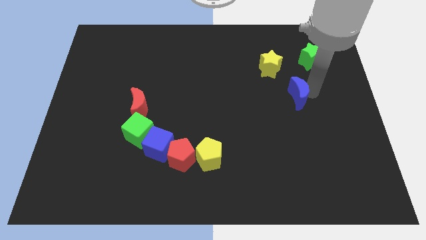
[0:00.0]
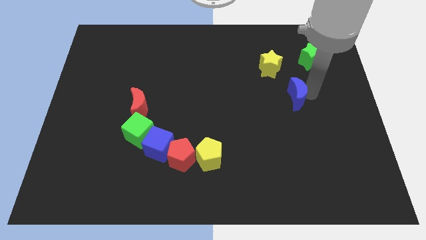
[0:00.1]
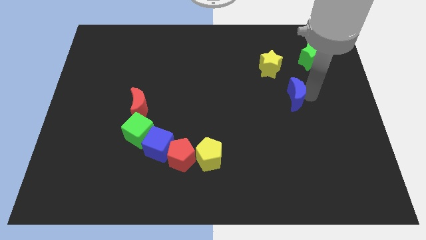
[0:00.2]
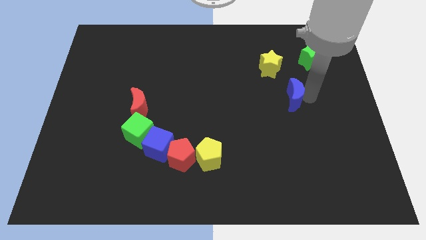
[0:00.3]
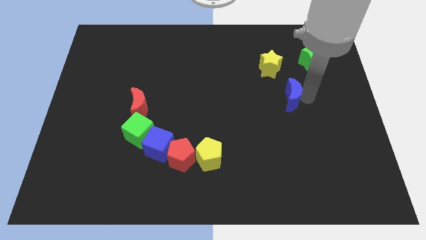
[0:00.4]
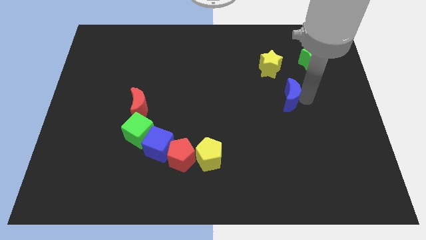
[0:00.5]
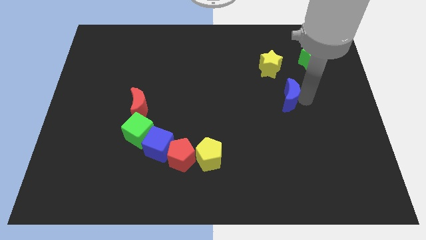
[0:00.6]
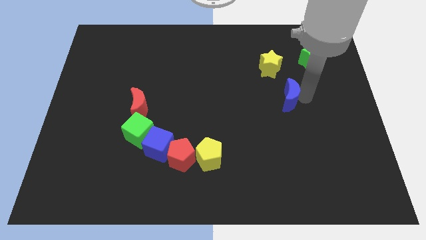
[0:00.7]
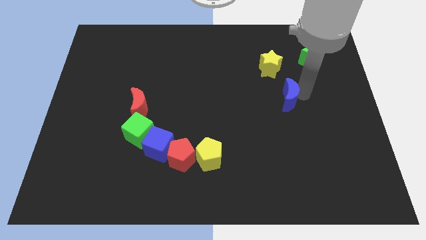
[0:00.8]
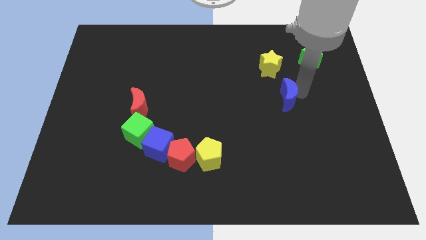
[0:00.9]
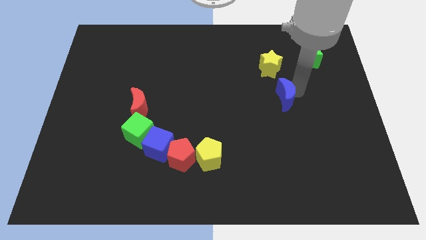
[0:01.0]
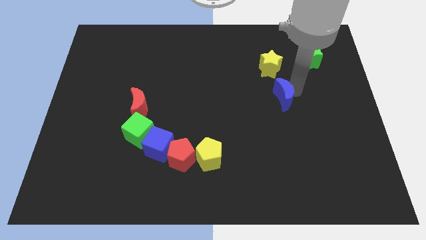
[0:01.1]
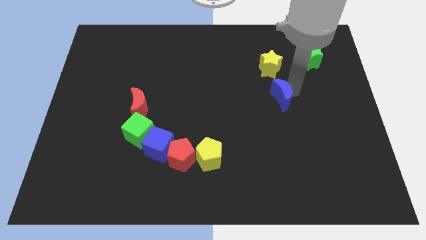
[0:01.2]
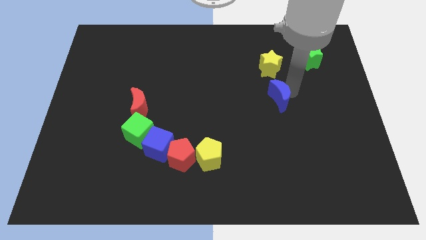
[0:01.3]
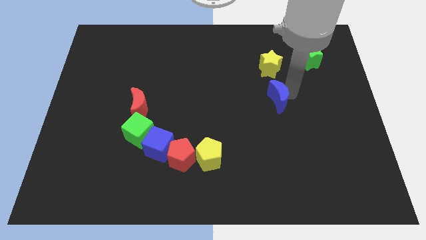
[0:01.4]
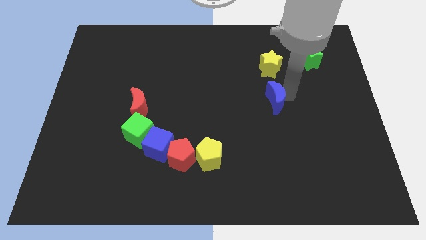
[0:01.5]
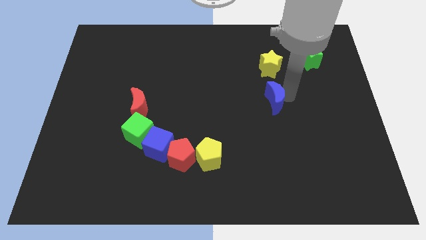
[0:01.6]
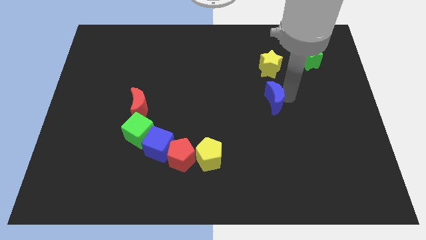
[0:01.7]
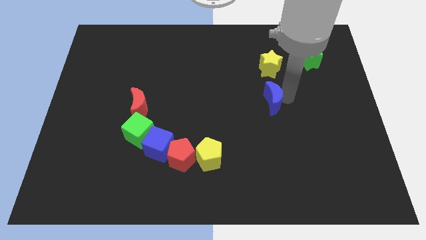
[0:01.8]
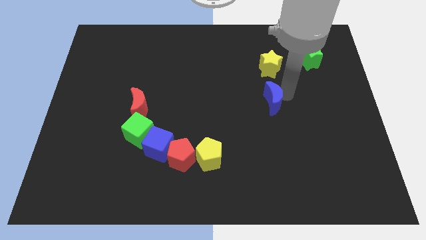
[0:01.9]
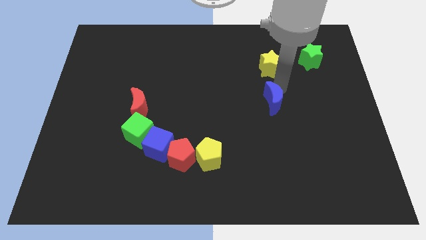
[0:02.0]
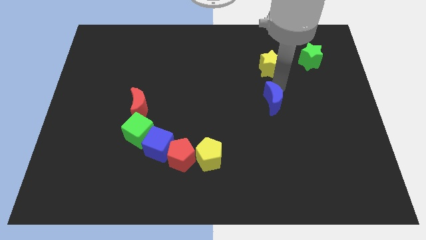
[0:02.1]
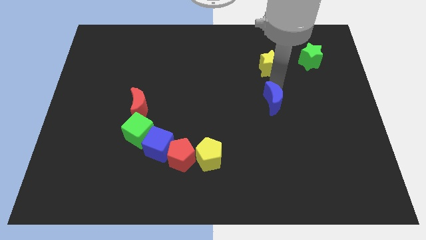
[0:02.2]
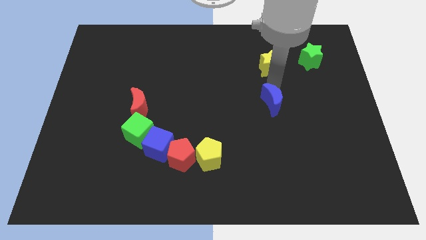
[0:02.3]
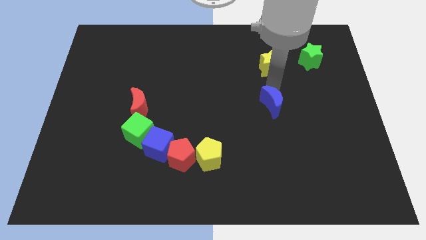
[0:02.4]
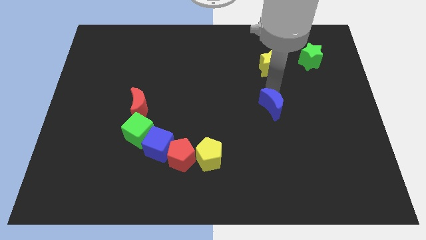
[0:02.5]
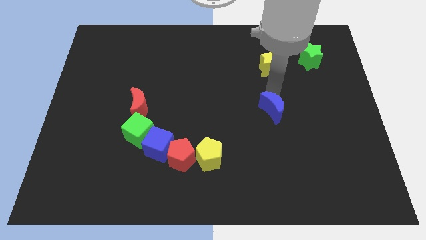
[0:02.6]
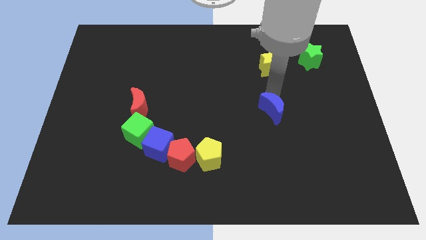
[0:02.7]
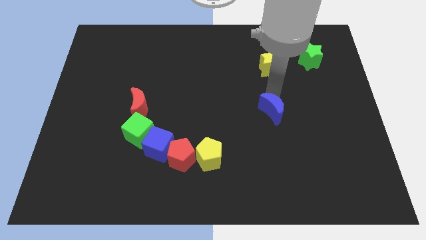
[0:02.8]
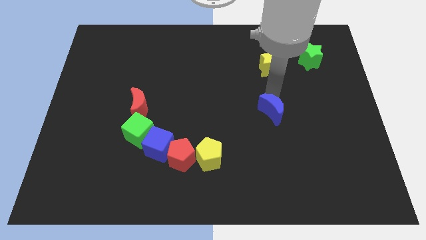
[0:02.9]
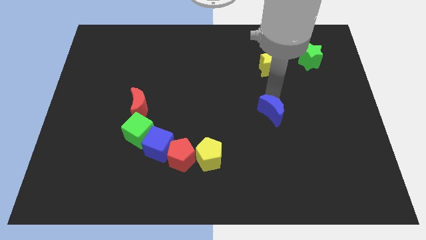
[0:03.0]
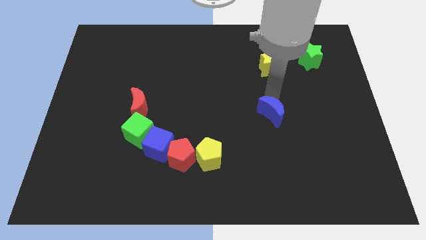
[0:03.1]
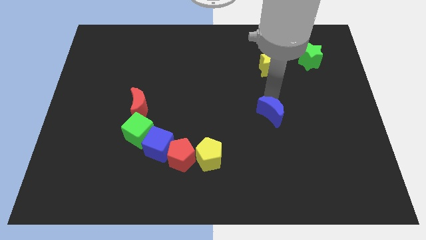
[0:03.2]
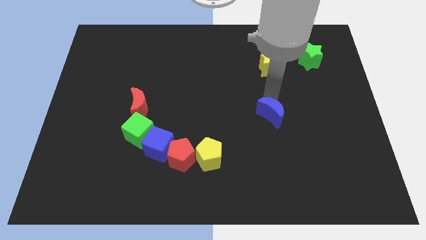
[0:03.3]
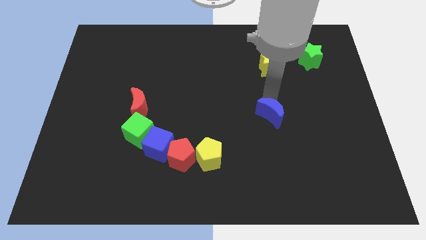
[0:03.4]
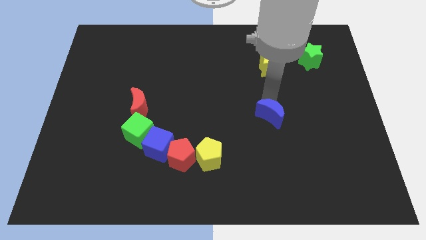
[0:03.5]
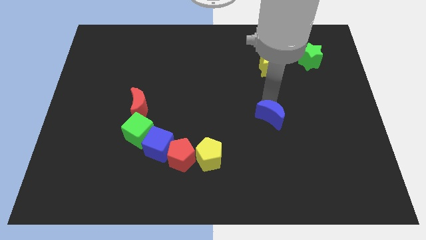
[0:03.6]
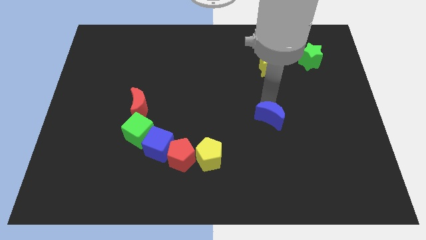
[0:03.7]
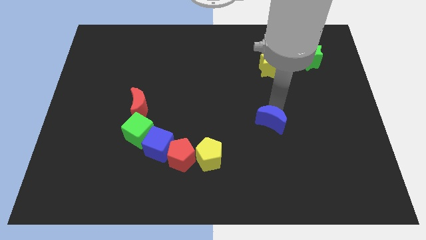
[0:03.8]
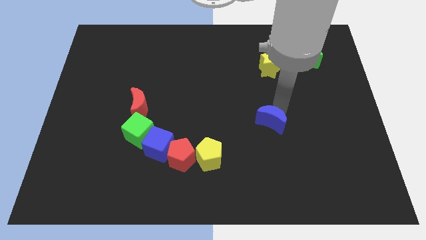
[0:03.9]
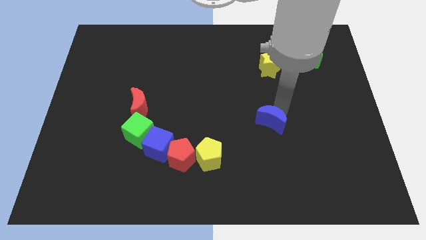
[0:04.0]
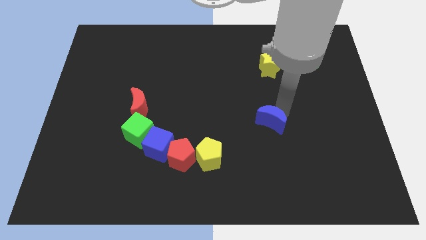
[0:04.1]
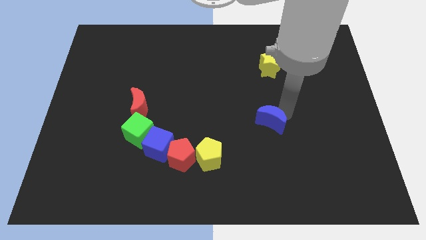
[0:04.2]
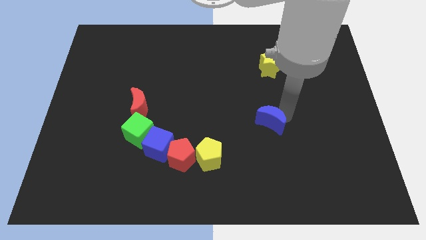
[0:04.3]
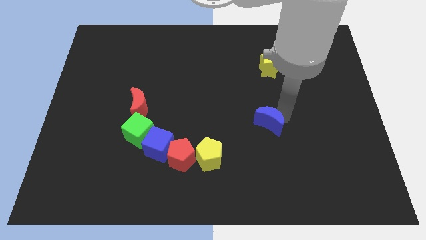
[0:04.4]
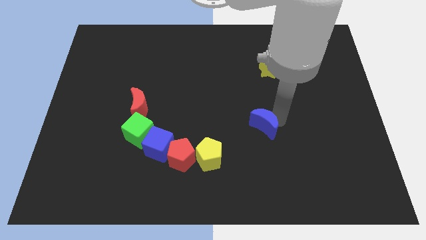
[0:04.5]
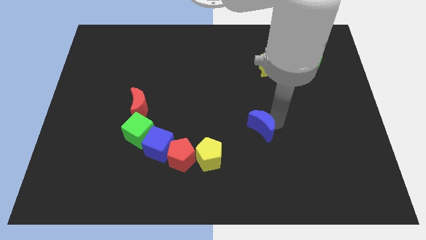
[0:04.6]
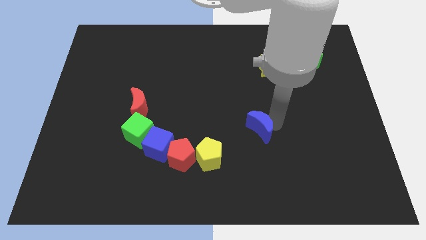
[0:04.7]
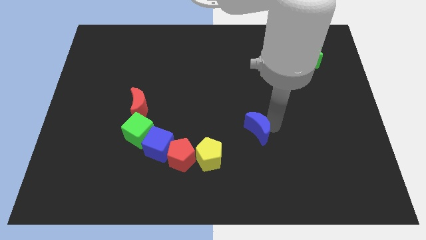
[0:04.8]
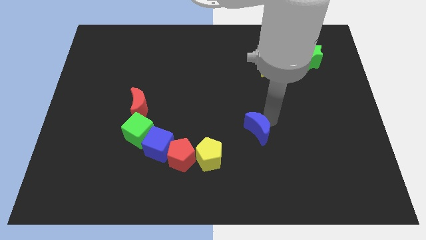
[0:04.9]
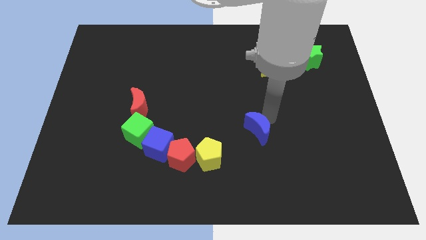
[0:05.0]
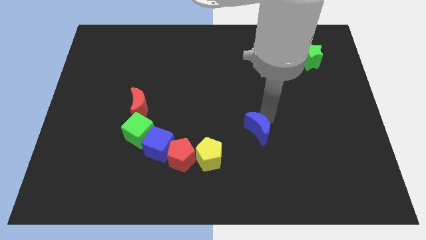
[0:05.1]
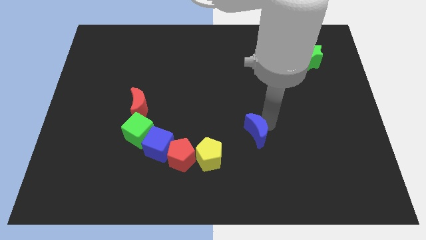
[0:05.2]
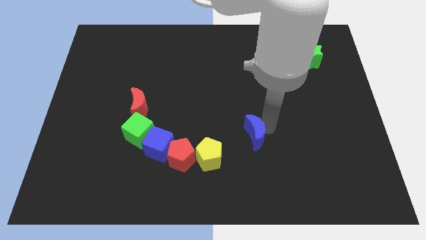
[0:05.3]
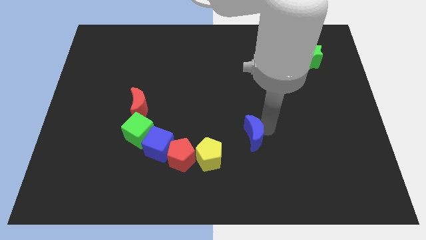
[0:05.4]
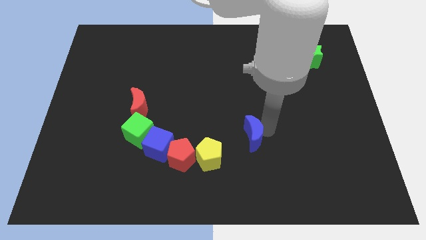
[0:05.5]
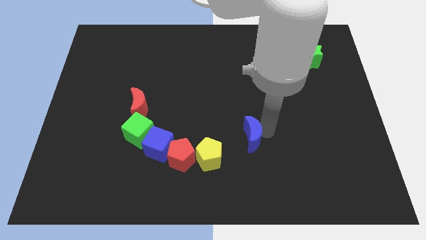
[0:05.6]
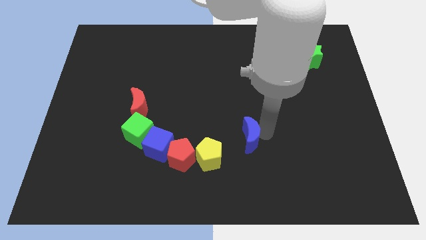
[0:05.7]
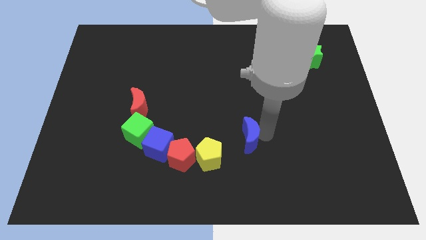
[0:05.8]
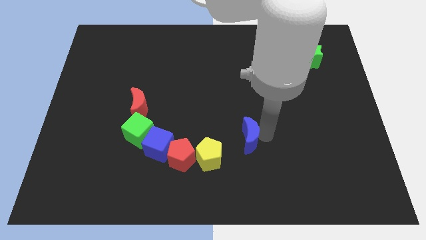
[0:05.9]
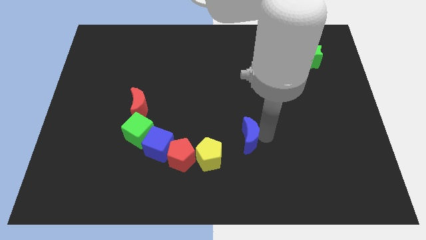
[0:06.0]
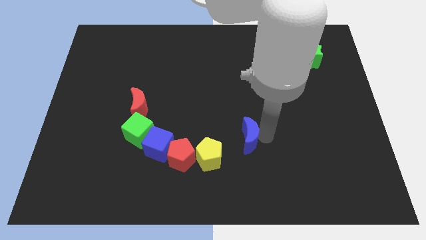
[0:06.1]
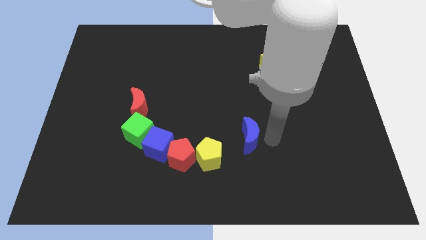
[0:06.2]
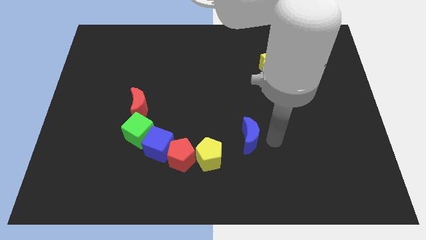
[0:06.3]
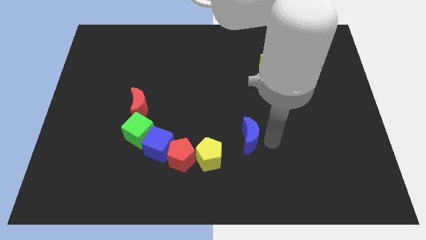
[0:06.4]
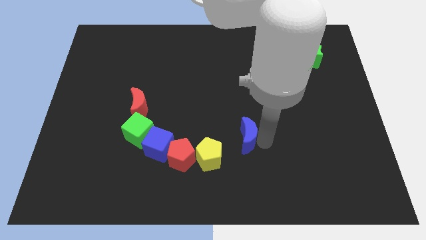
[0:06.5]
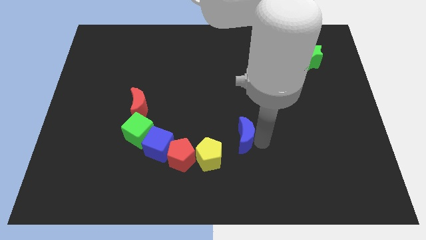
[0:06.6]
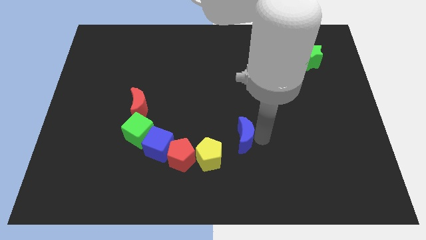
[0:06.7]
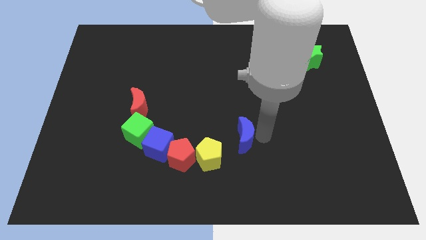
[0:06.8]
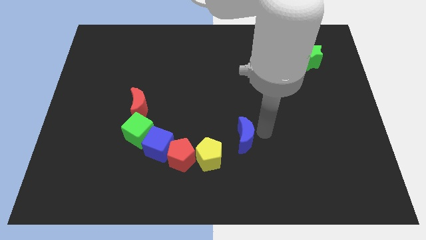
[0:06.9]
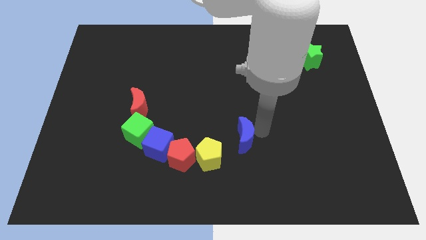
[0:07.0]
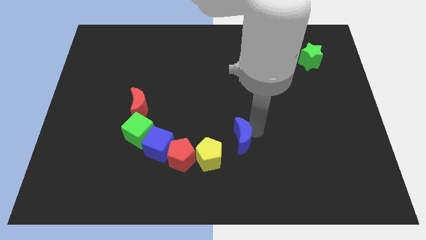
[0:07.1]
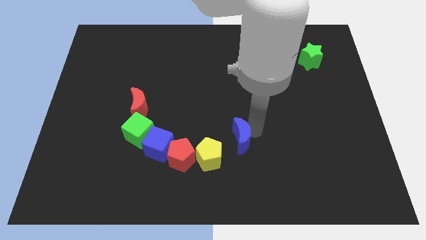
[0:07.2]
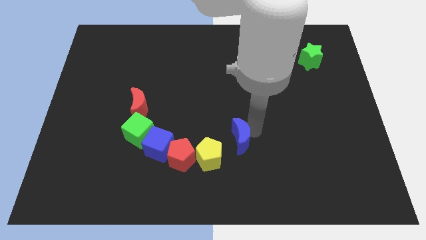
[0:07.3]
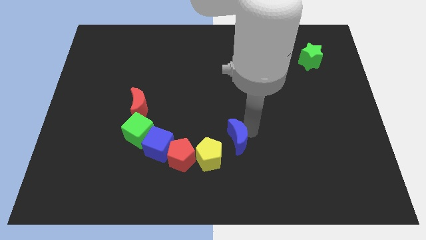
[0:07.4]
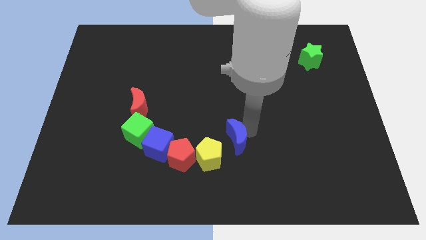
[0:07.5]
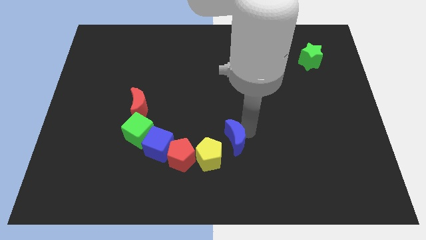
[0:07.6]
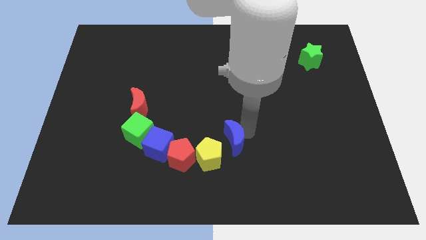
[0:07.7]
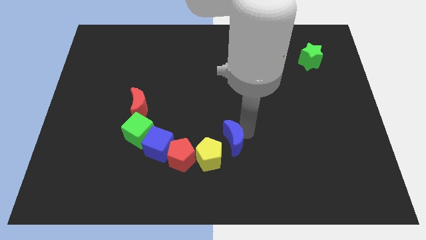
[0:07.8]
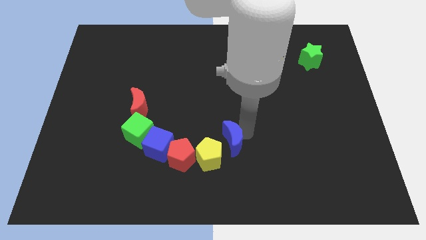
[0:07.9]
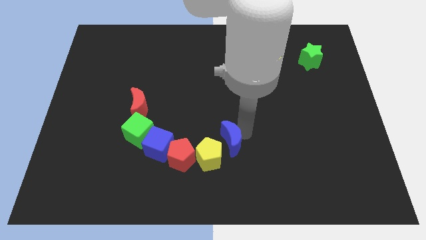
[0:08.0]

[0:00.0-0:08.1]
push blue moon towards yellow pentagon

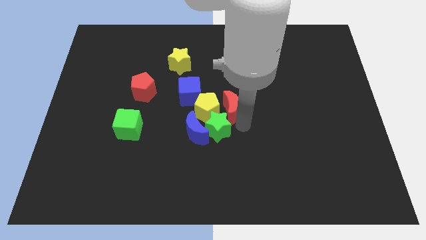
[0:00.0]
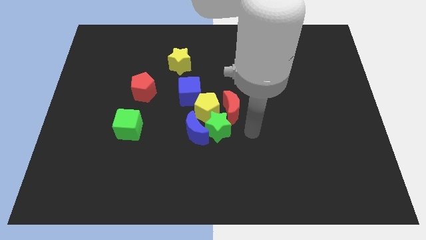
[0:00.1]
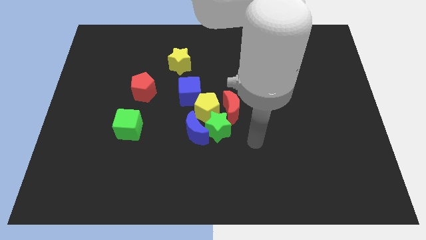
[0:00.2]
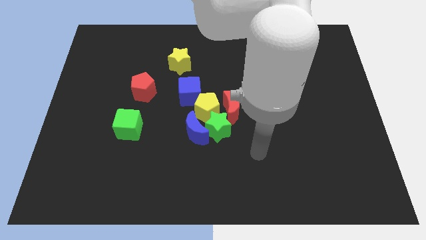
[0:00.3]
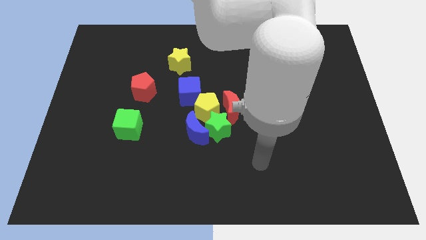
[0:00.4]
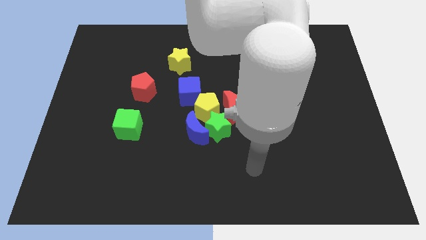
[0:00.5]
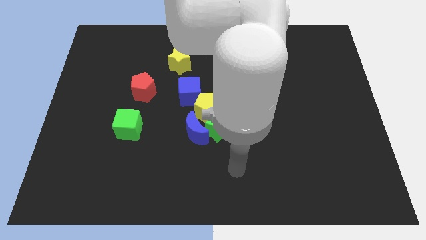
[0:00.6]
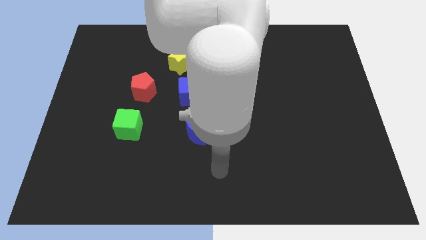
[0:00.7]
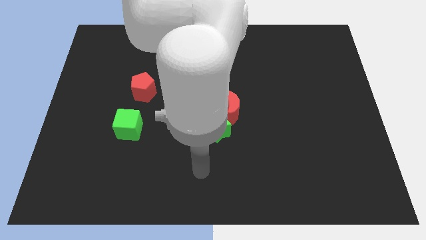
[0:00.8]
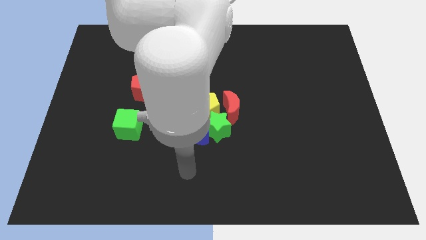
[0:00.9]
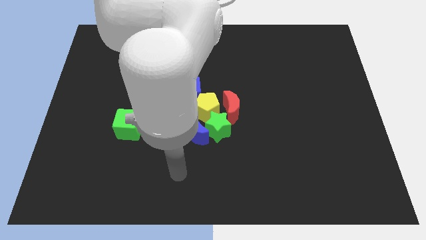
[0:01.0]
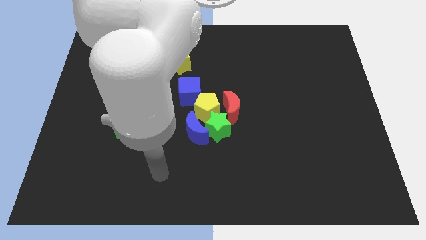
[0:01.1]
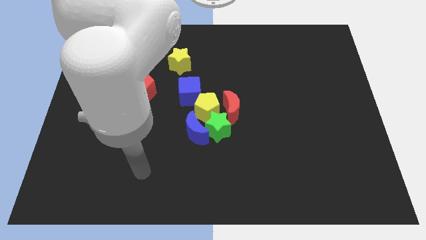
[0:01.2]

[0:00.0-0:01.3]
move your hand away from the red moon
